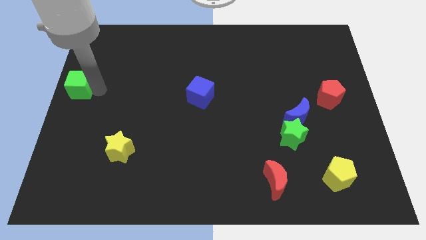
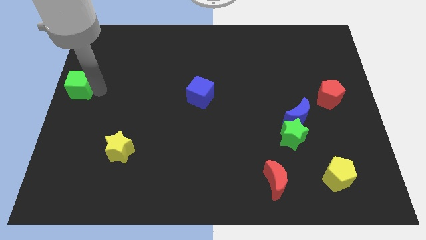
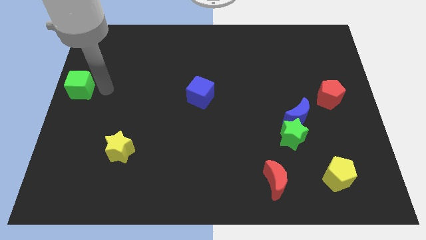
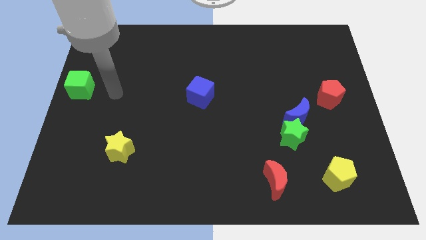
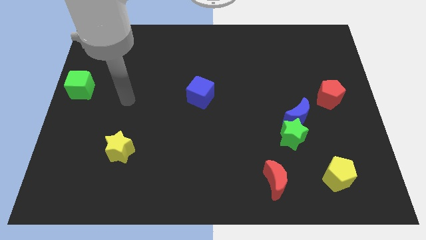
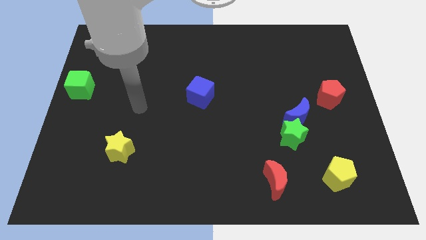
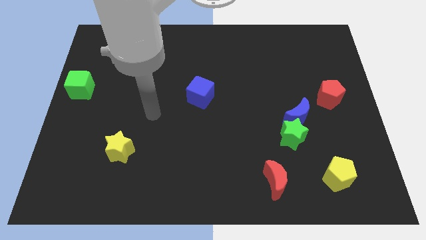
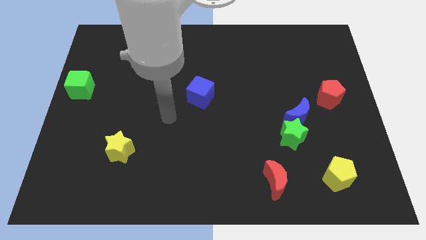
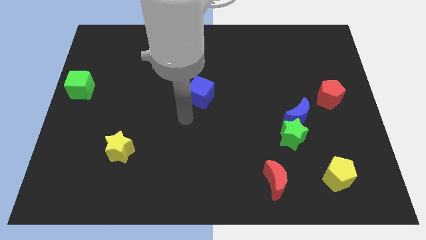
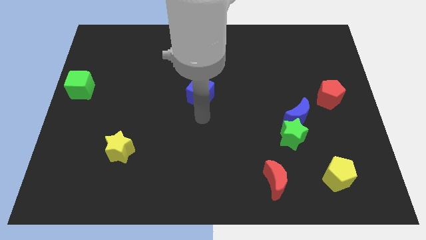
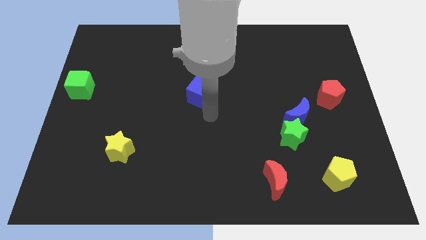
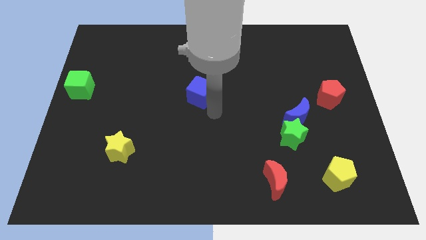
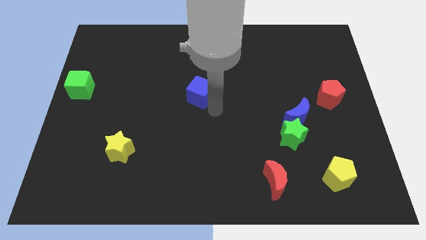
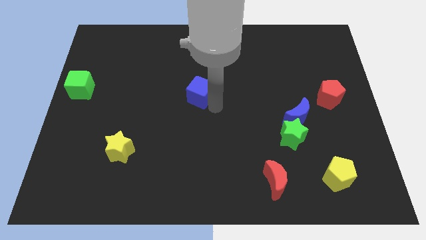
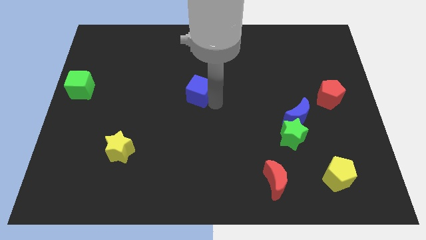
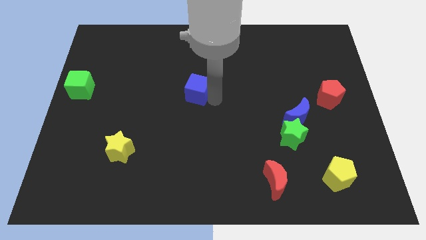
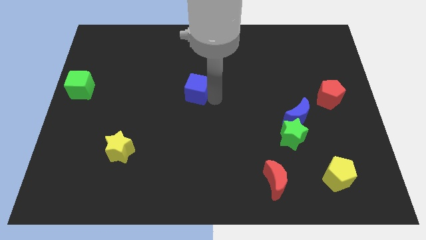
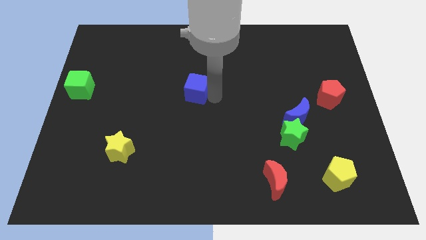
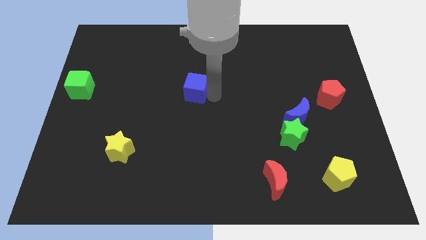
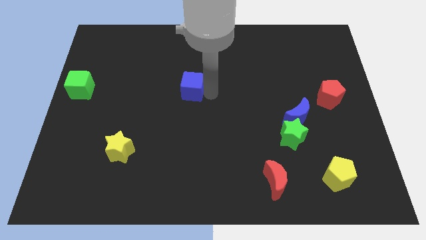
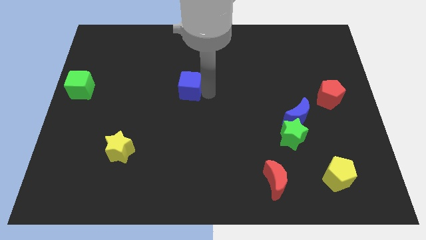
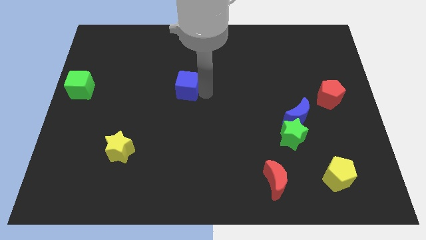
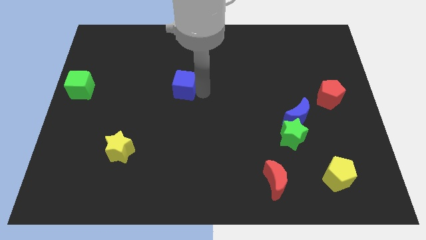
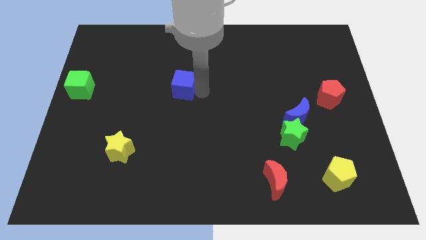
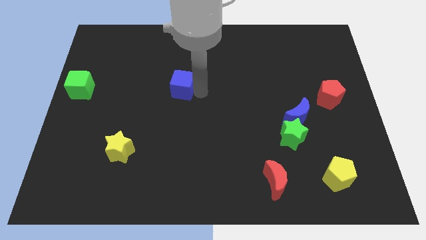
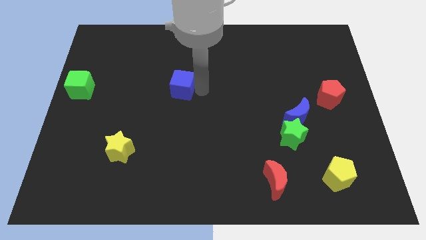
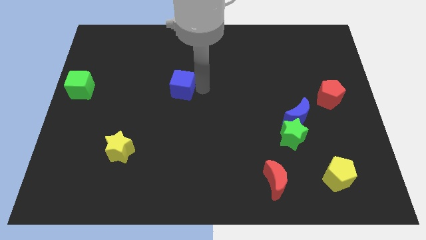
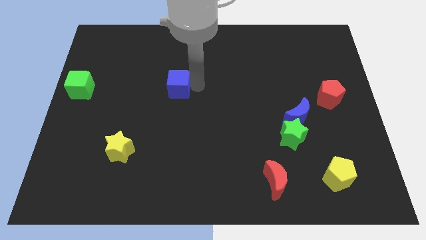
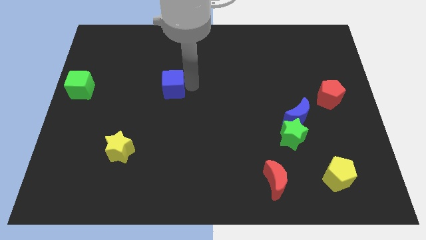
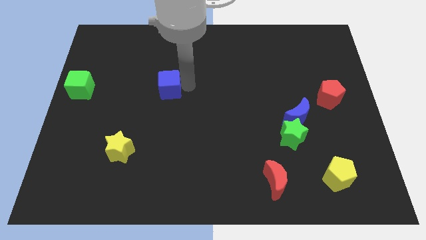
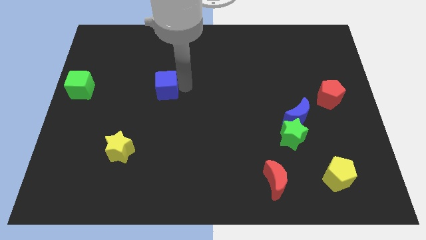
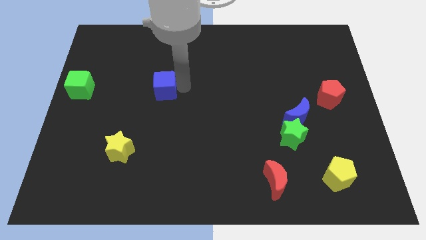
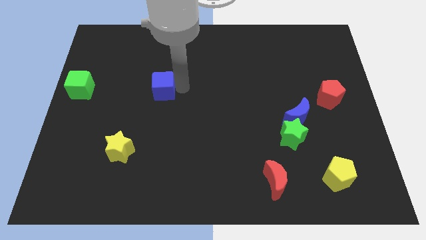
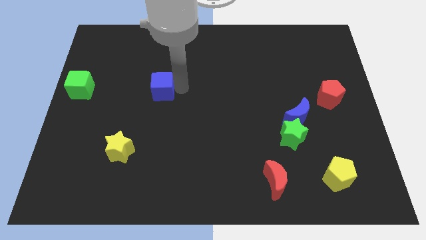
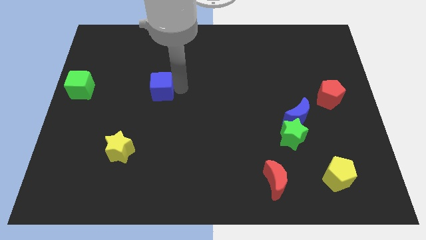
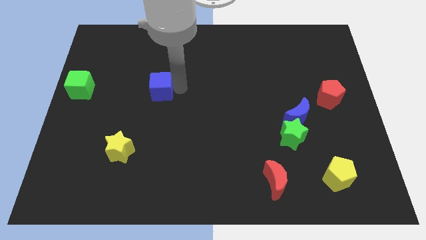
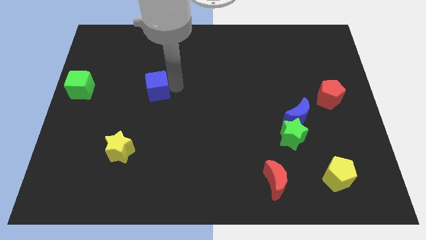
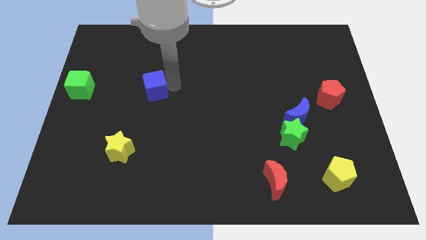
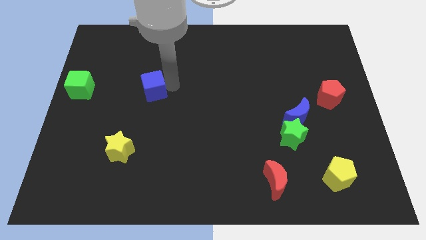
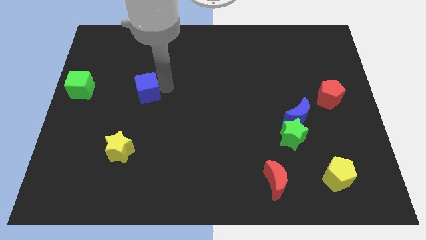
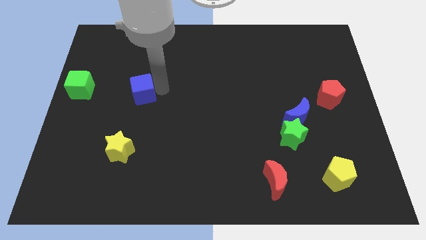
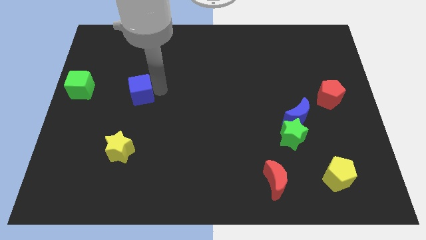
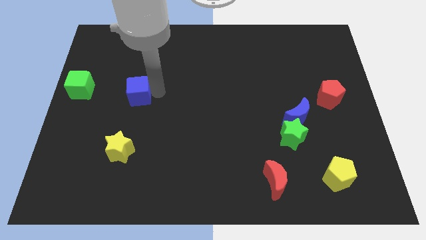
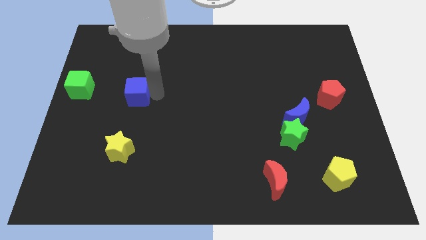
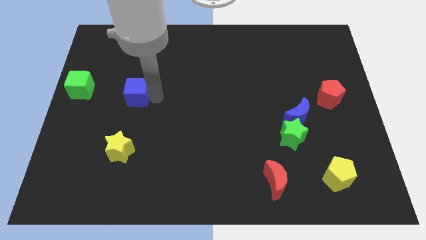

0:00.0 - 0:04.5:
put the blue cube vertically above the yellow star

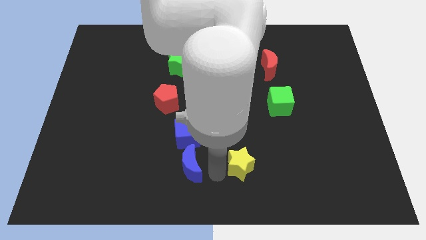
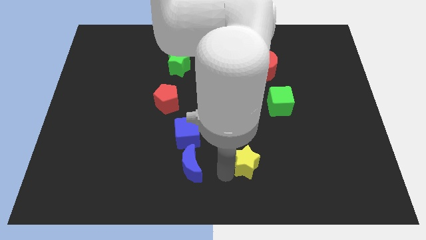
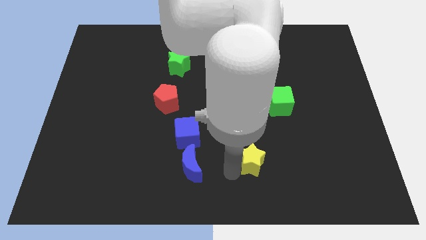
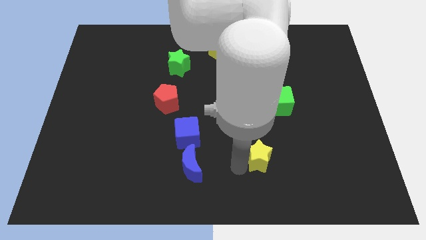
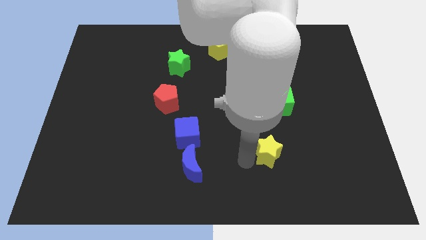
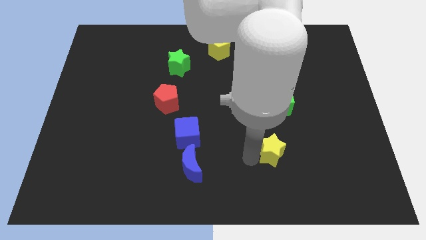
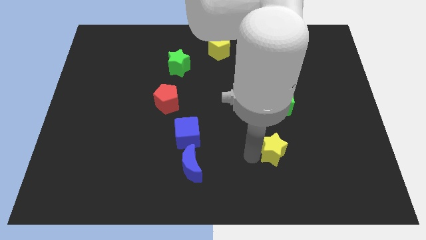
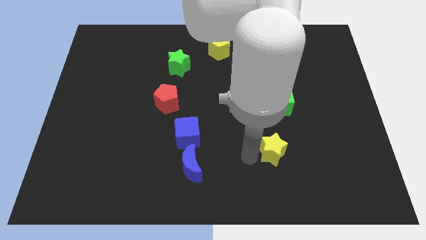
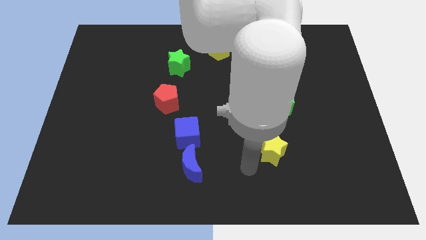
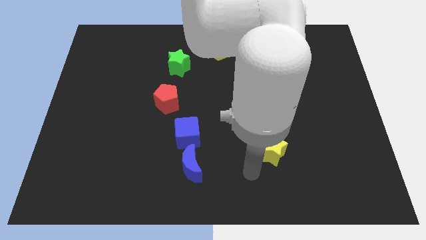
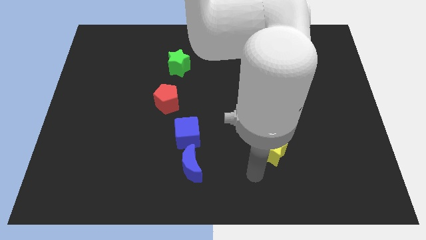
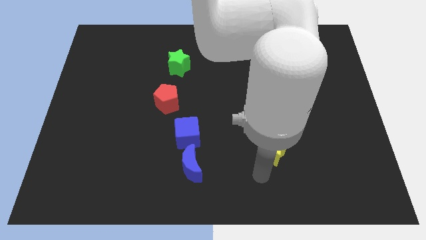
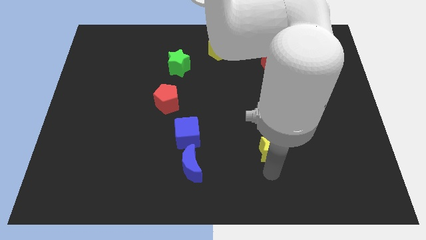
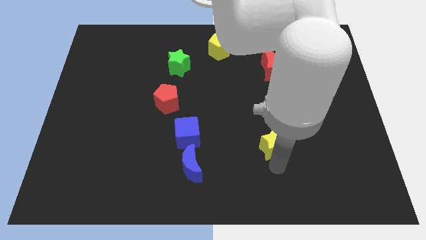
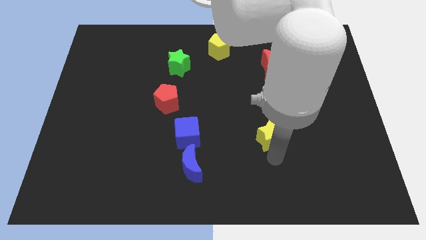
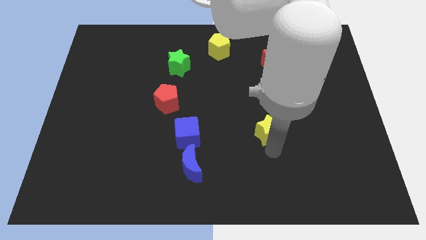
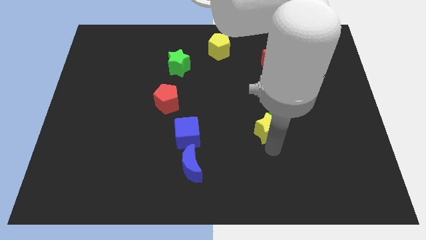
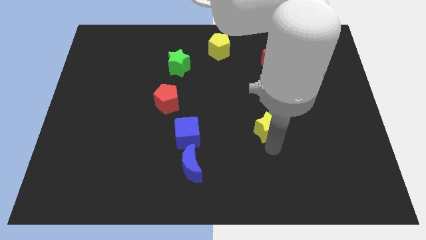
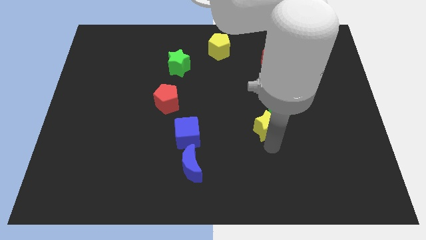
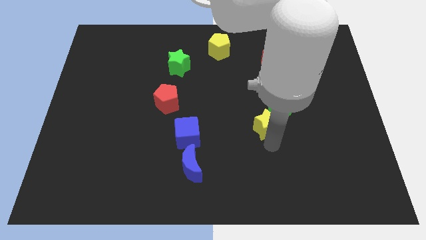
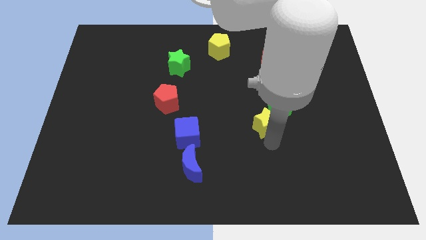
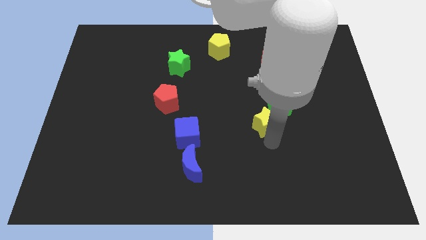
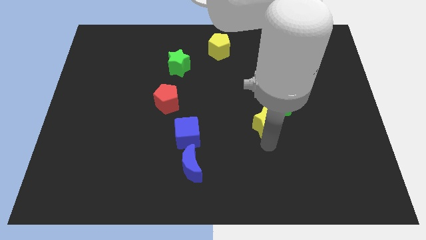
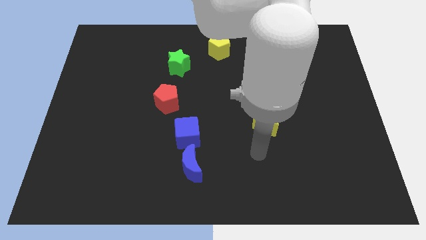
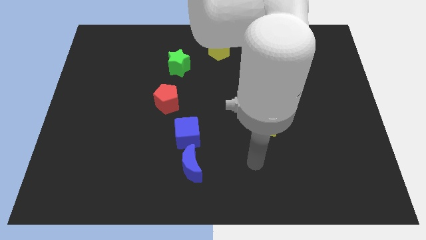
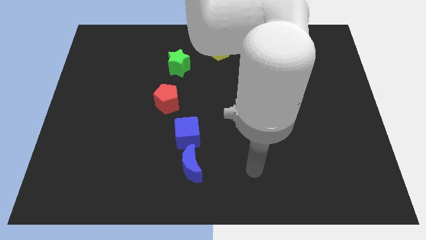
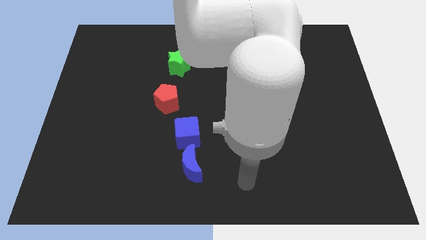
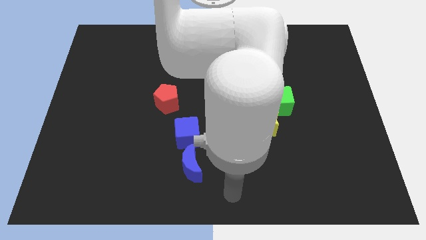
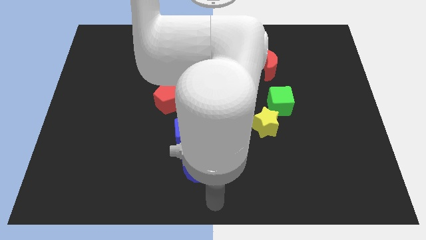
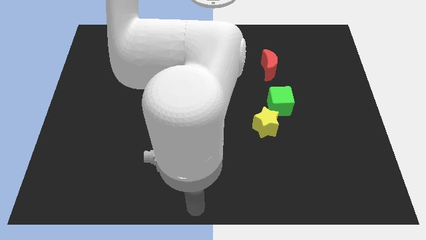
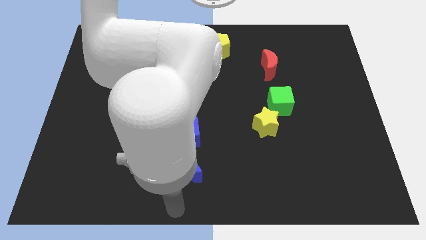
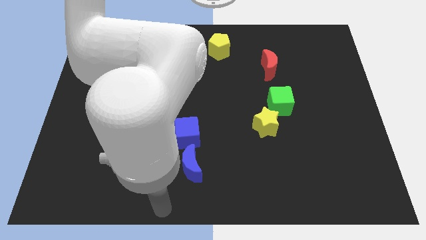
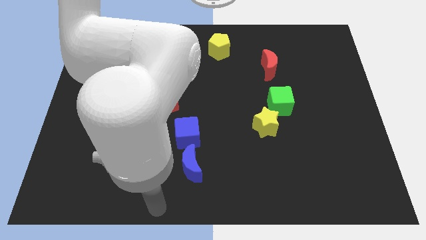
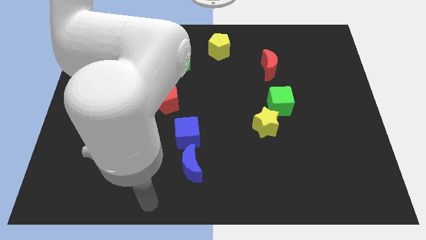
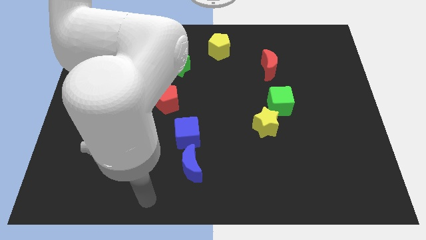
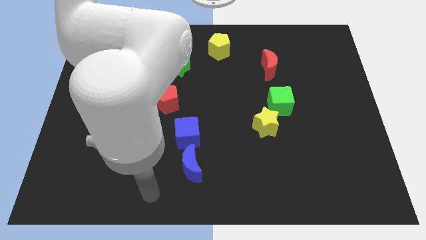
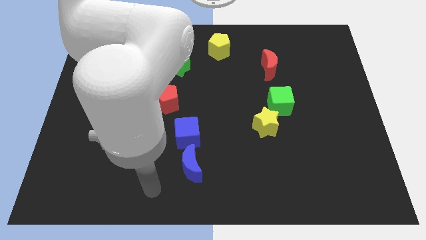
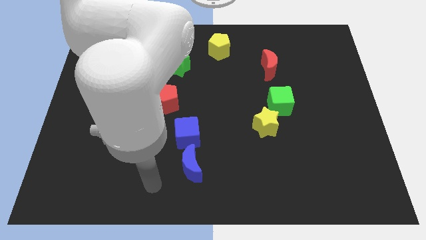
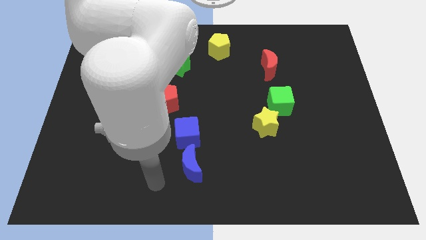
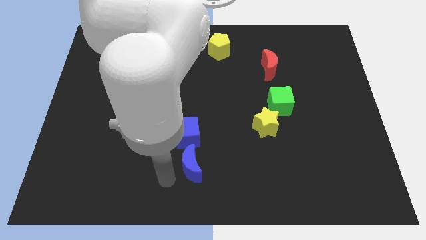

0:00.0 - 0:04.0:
place the yellow star diagonally towards bottom left of the green cube

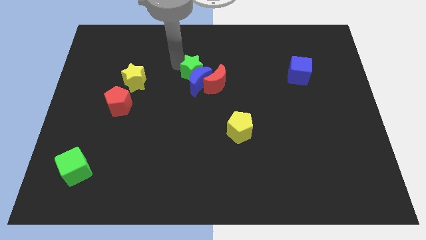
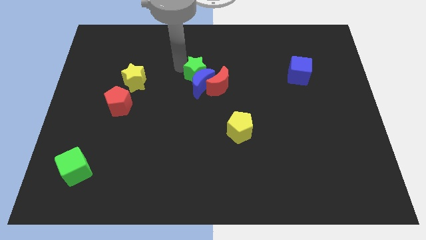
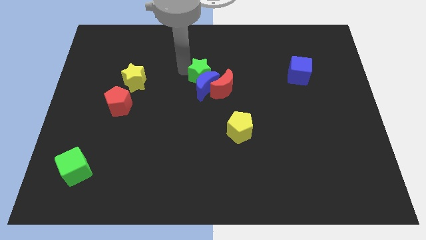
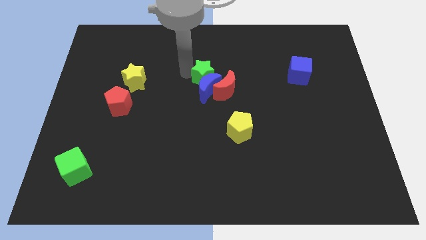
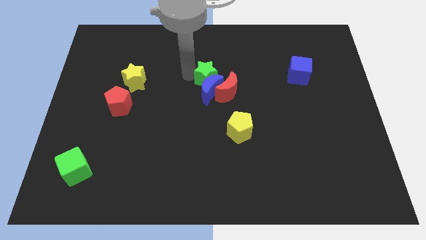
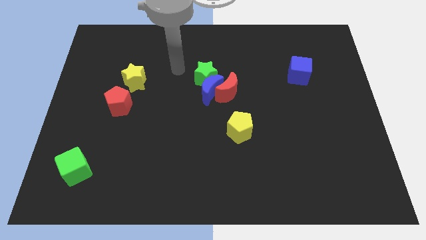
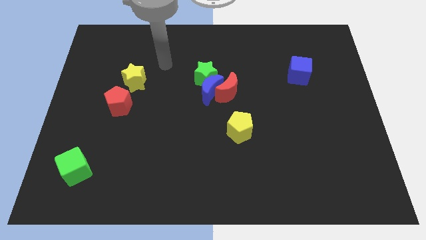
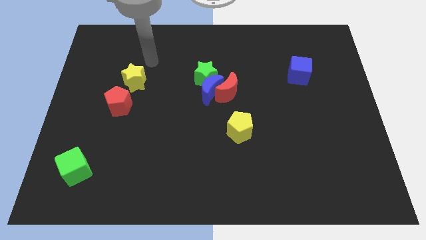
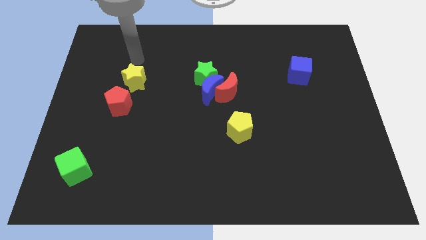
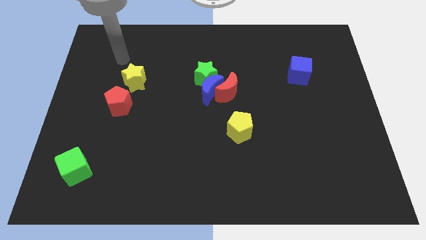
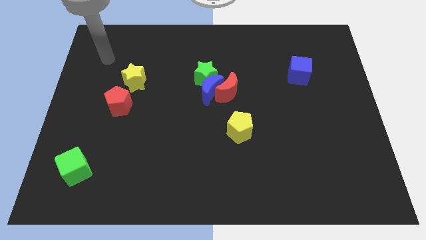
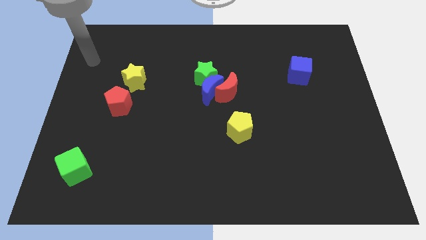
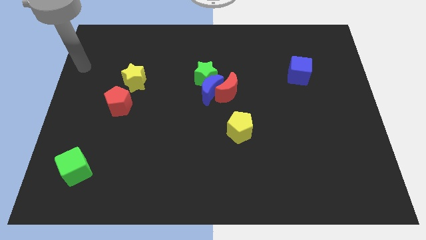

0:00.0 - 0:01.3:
push the green starblue crescent and red crescent slightly to the center
